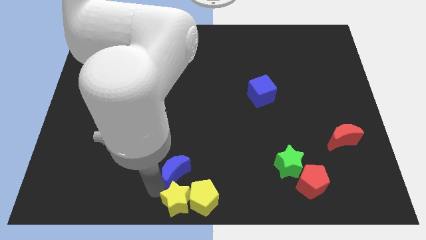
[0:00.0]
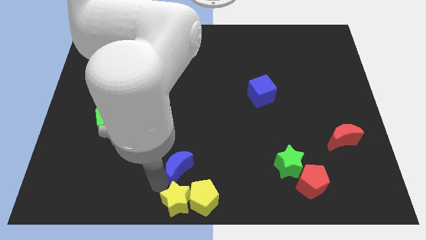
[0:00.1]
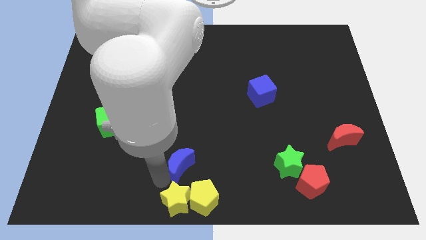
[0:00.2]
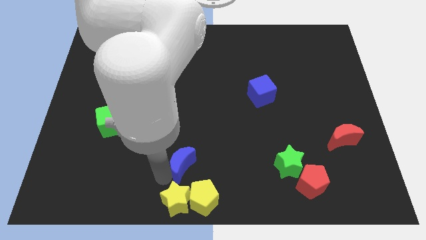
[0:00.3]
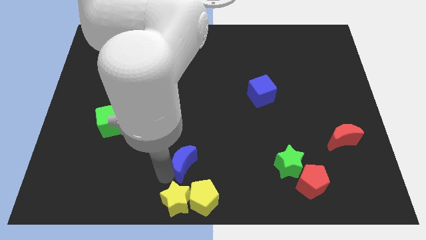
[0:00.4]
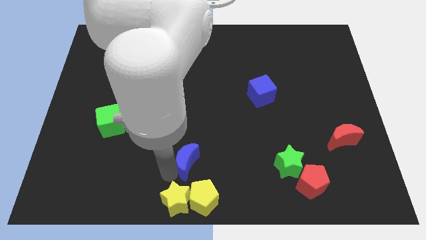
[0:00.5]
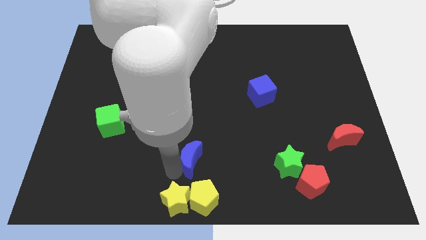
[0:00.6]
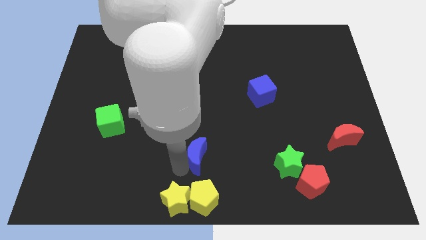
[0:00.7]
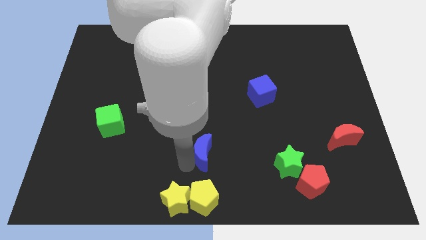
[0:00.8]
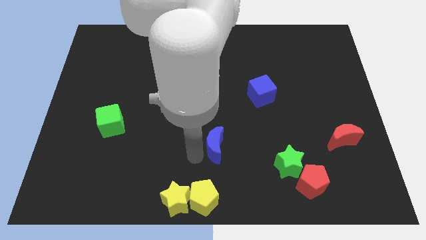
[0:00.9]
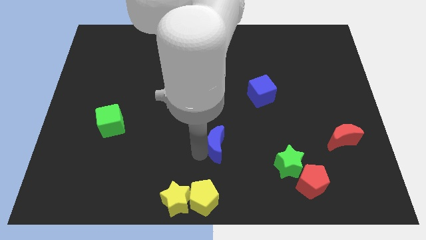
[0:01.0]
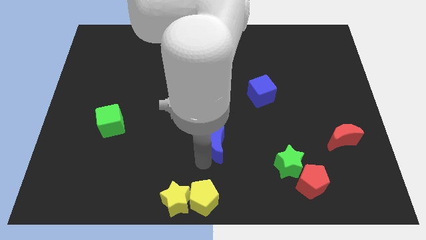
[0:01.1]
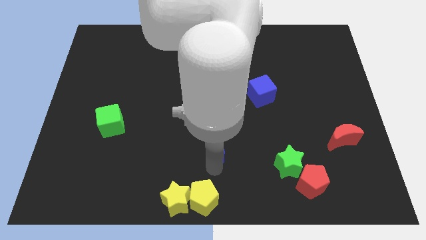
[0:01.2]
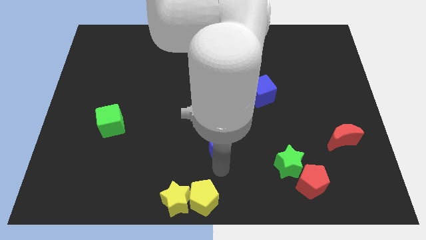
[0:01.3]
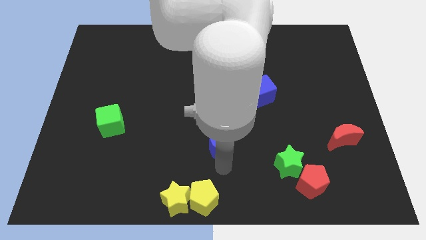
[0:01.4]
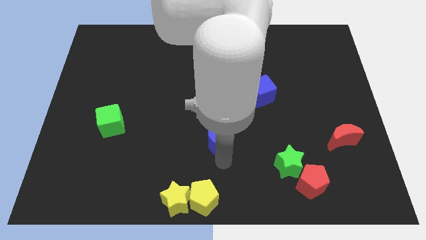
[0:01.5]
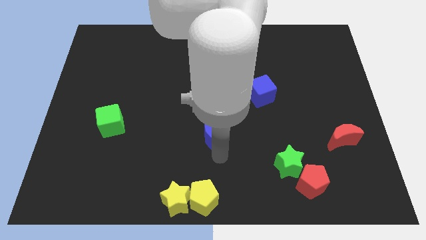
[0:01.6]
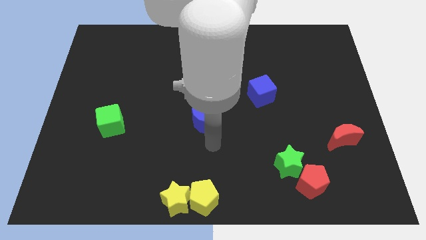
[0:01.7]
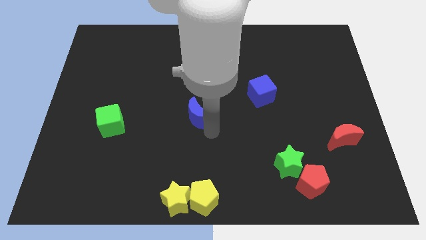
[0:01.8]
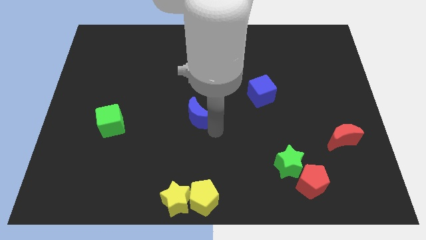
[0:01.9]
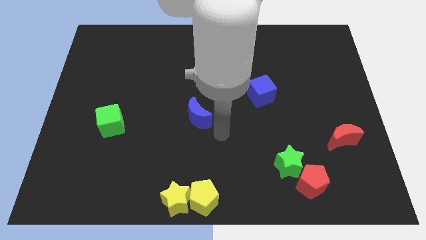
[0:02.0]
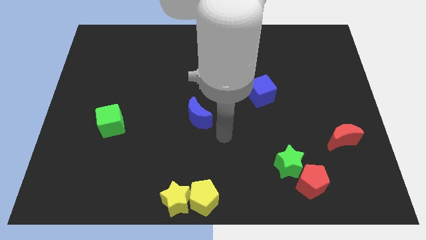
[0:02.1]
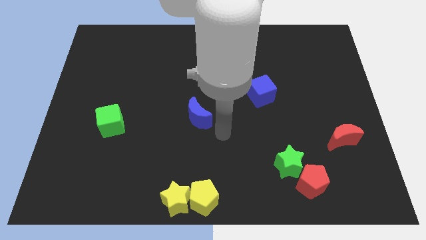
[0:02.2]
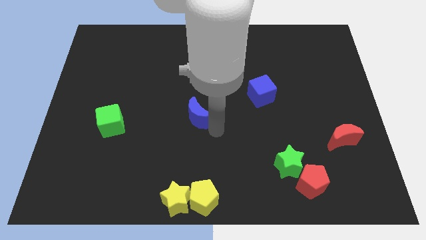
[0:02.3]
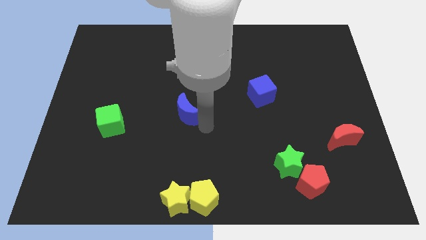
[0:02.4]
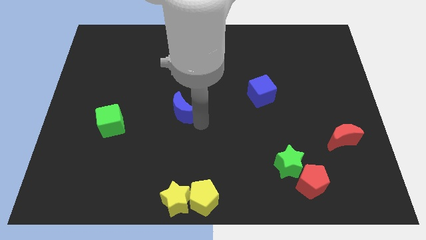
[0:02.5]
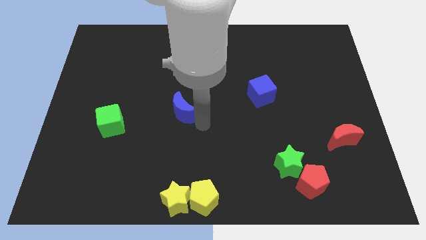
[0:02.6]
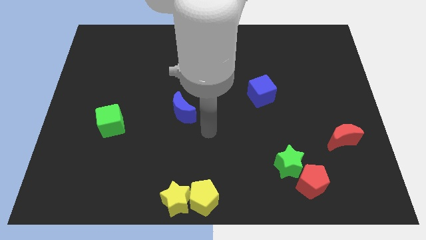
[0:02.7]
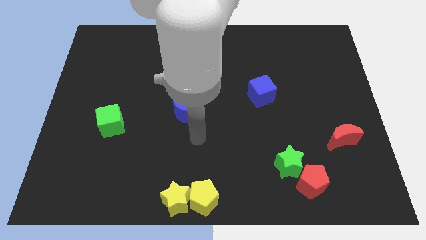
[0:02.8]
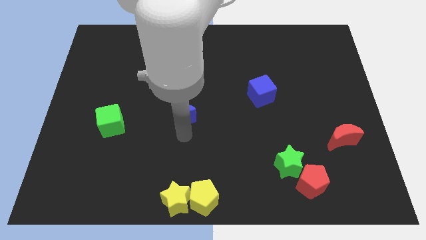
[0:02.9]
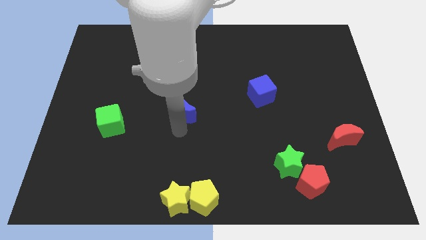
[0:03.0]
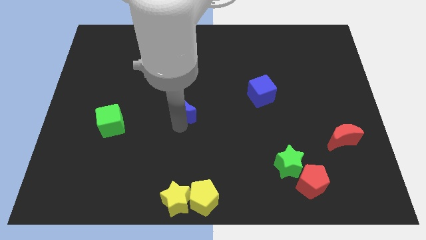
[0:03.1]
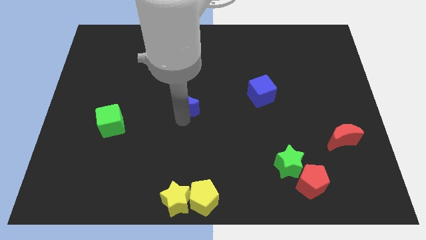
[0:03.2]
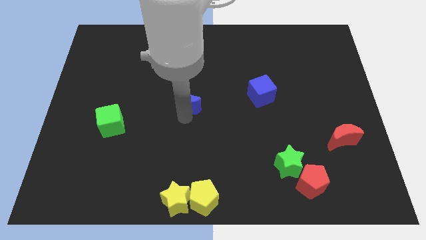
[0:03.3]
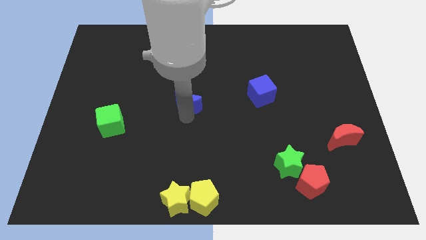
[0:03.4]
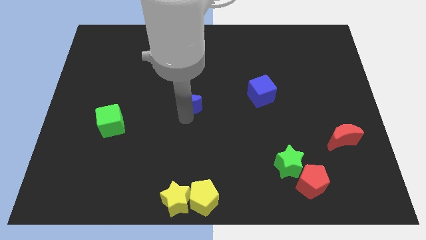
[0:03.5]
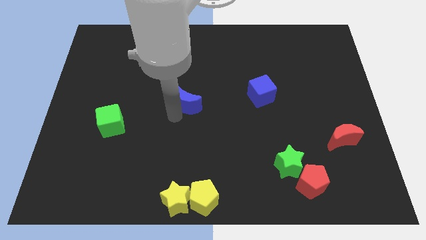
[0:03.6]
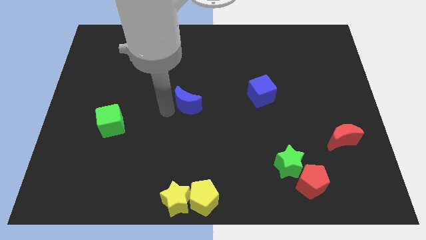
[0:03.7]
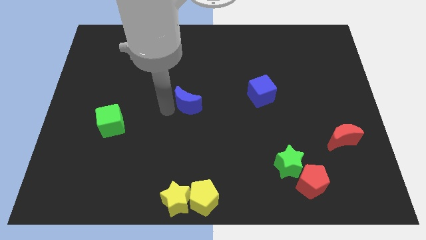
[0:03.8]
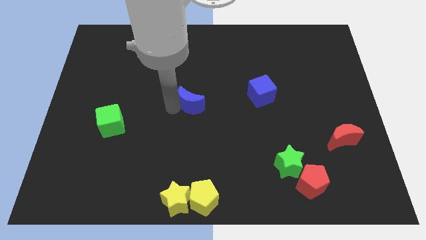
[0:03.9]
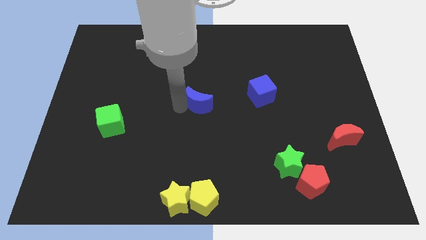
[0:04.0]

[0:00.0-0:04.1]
move the blue crescent to the center of the board

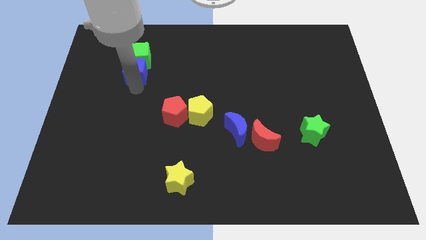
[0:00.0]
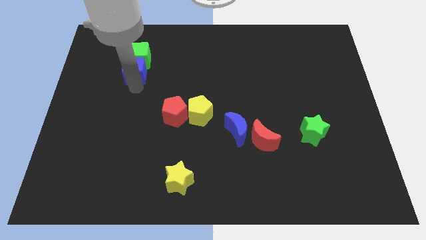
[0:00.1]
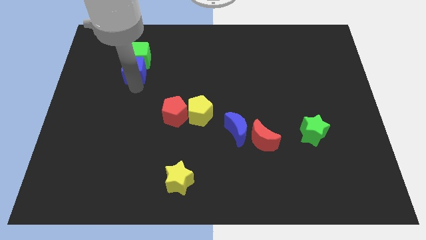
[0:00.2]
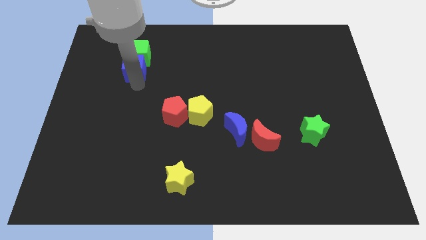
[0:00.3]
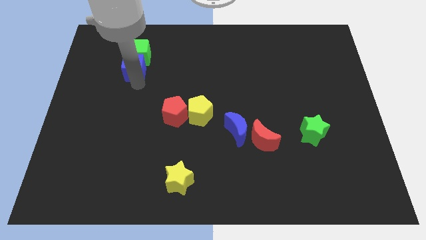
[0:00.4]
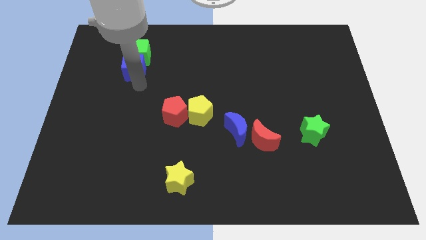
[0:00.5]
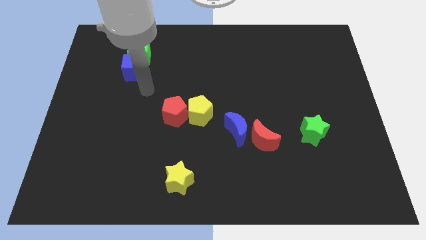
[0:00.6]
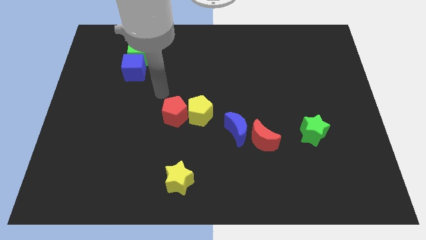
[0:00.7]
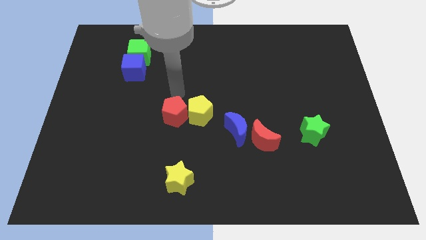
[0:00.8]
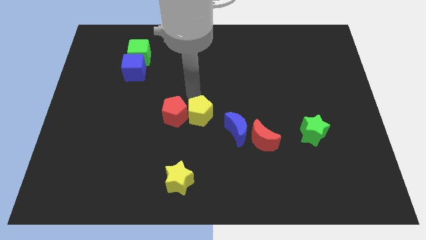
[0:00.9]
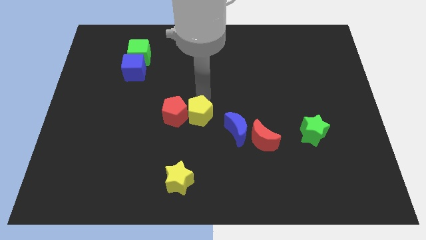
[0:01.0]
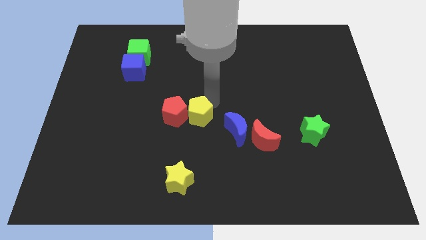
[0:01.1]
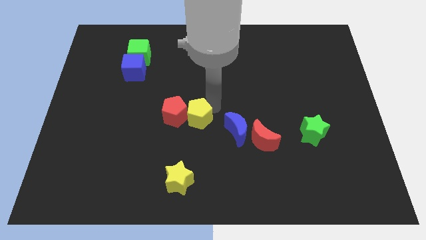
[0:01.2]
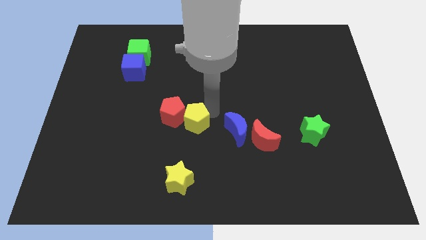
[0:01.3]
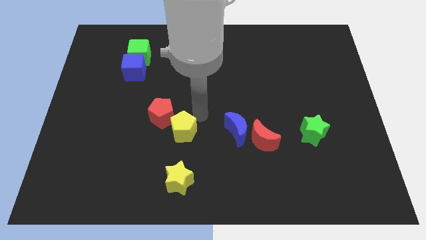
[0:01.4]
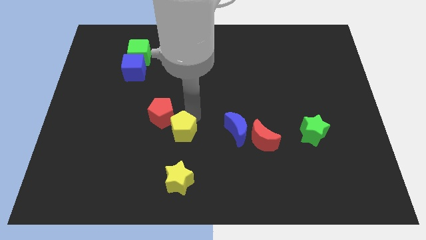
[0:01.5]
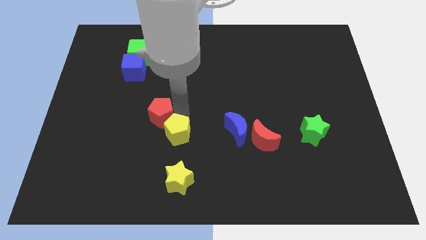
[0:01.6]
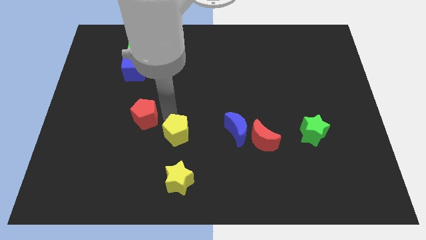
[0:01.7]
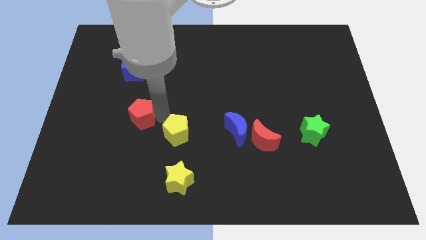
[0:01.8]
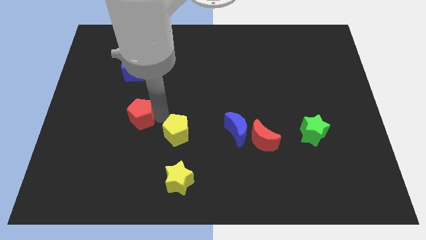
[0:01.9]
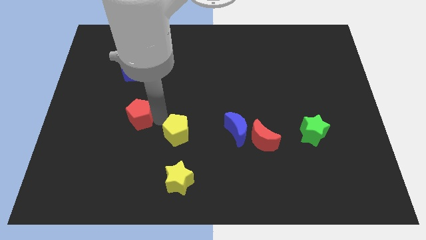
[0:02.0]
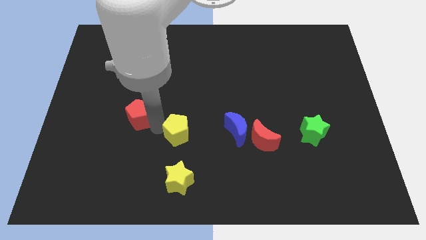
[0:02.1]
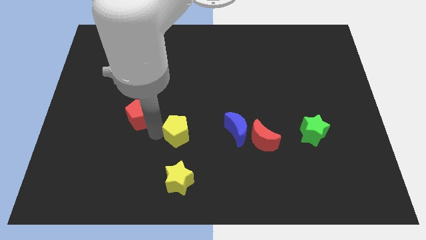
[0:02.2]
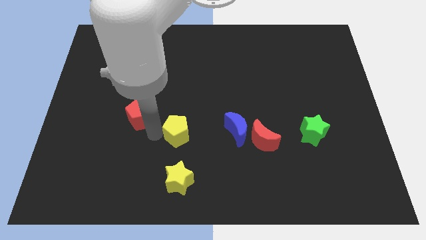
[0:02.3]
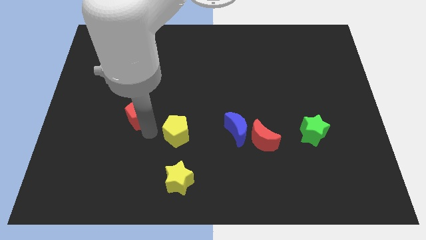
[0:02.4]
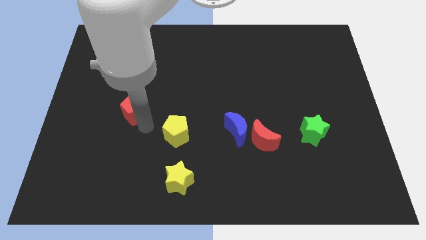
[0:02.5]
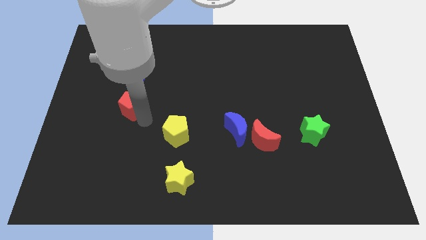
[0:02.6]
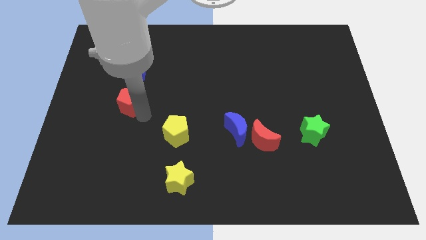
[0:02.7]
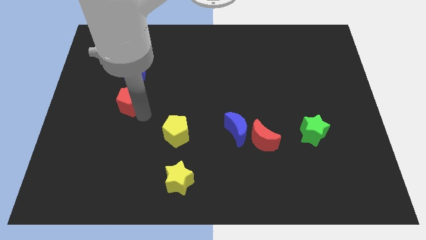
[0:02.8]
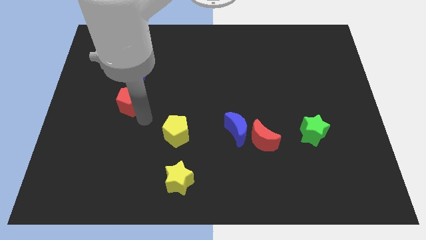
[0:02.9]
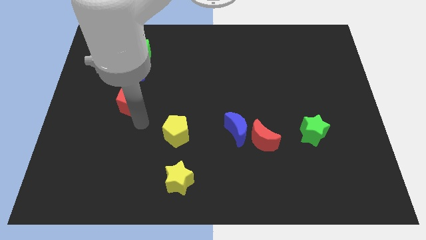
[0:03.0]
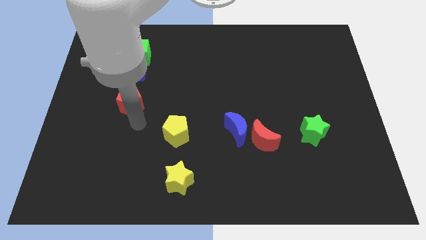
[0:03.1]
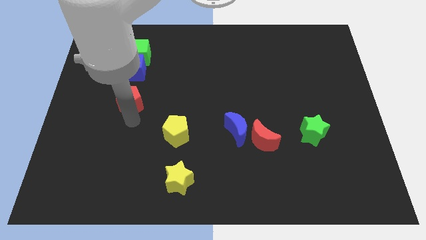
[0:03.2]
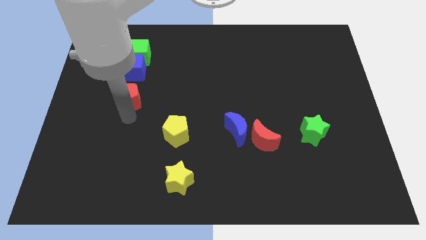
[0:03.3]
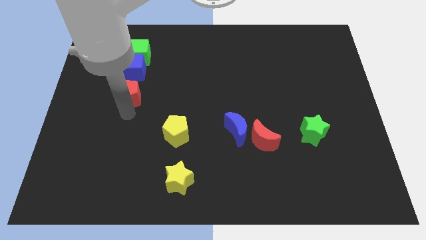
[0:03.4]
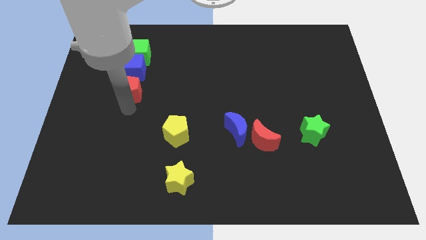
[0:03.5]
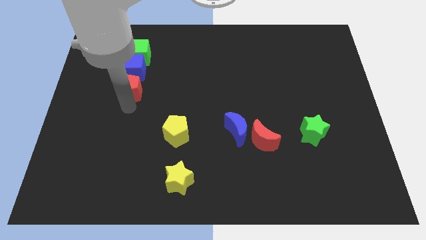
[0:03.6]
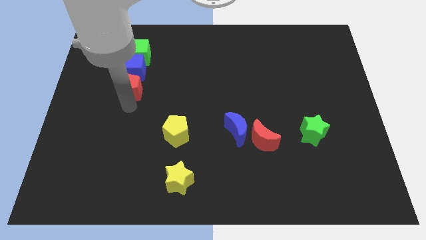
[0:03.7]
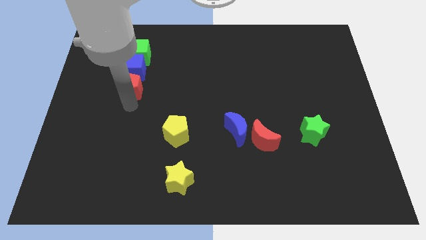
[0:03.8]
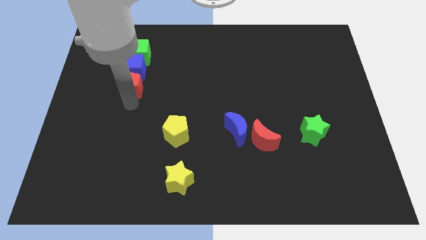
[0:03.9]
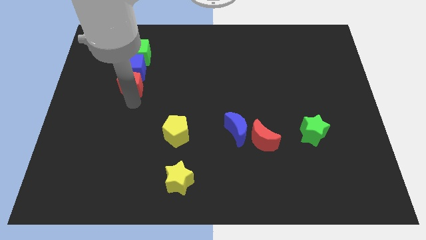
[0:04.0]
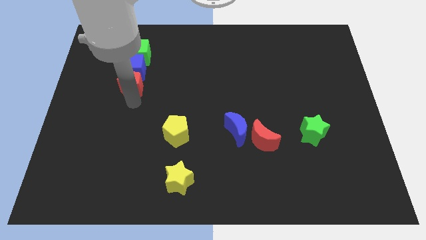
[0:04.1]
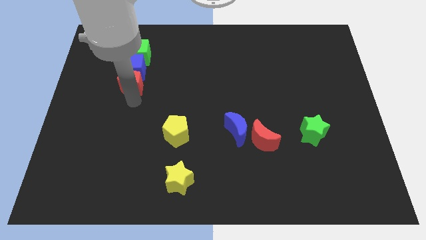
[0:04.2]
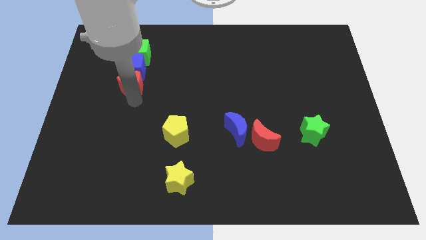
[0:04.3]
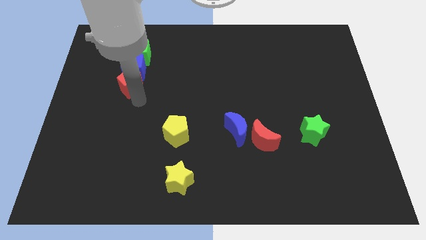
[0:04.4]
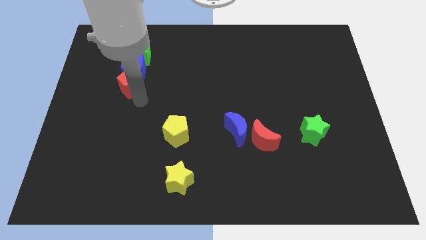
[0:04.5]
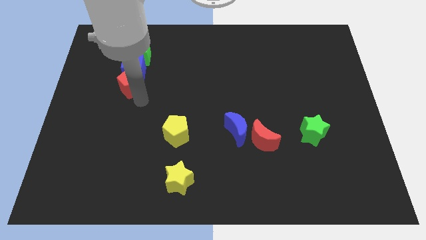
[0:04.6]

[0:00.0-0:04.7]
push the red pentagon to the bottom of the blue cube

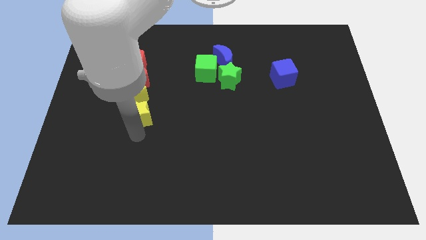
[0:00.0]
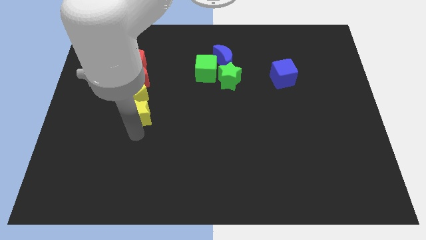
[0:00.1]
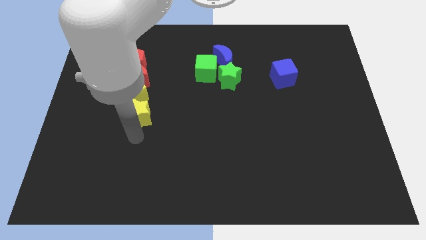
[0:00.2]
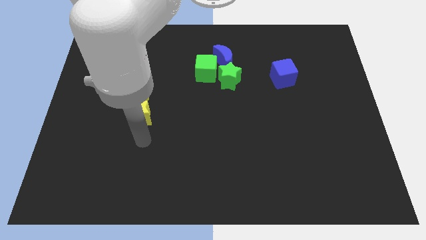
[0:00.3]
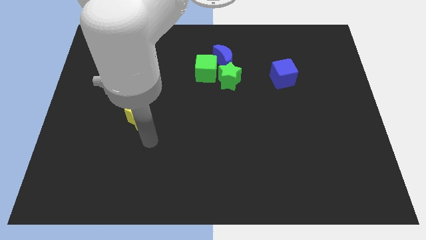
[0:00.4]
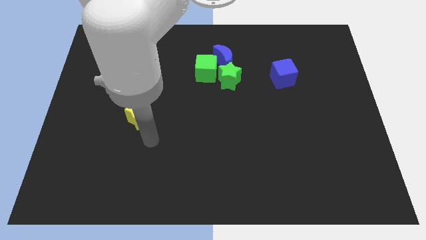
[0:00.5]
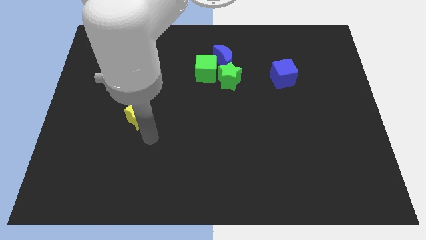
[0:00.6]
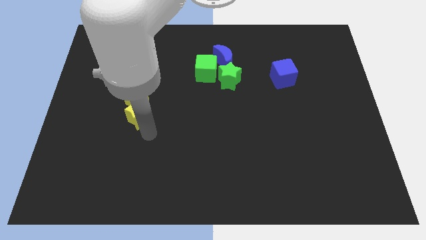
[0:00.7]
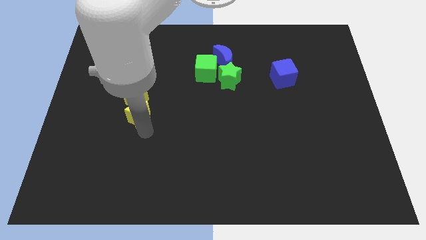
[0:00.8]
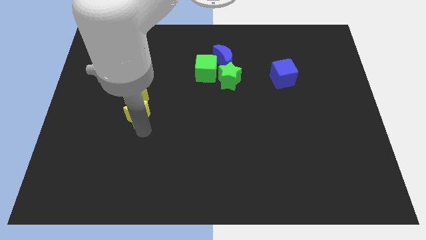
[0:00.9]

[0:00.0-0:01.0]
put the yellow star below the yellow pentagon
